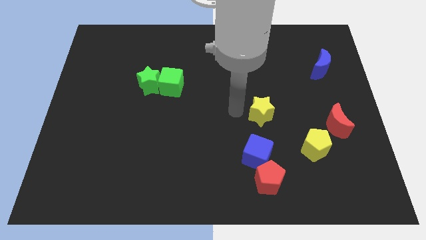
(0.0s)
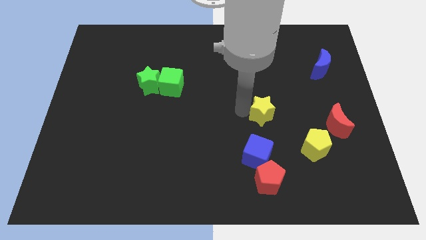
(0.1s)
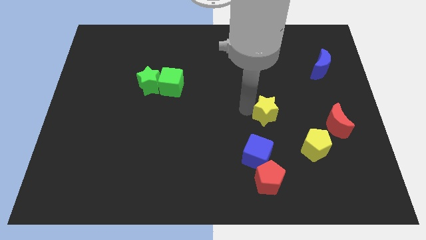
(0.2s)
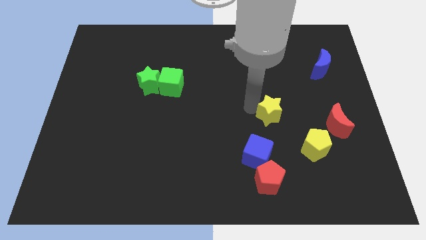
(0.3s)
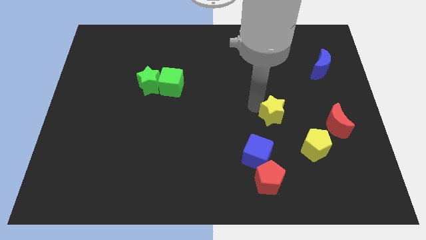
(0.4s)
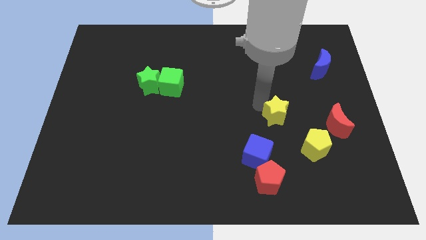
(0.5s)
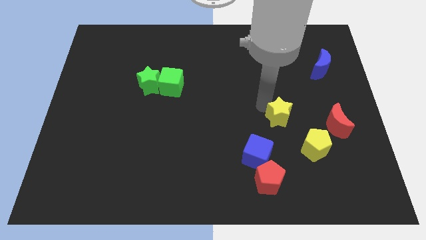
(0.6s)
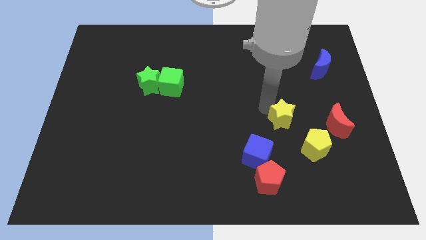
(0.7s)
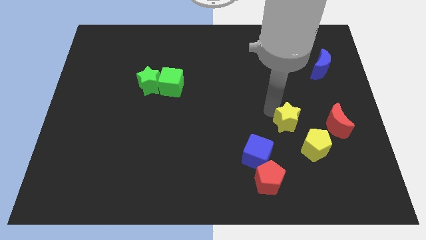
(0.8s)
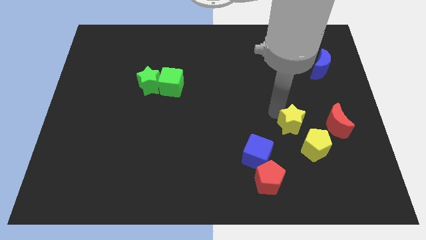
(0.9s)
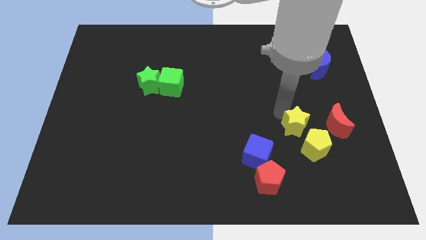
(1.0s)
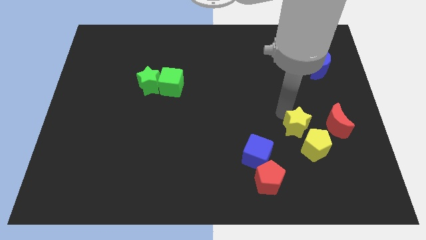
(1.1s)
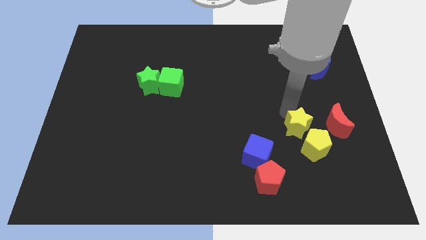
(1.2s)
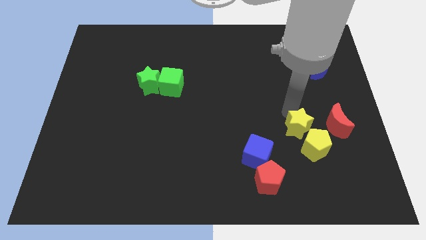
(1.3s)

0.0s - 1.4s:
move the yellow star towards the yellow pentagon

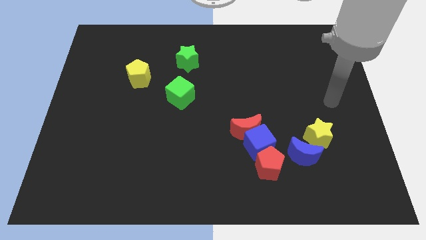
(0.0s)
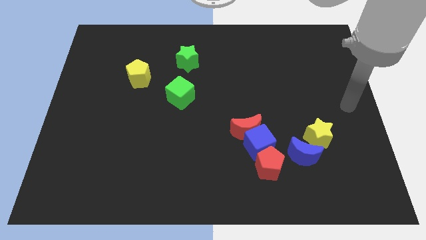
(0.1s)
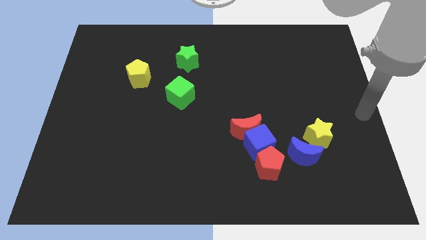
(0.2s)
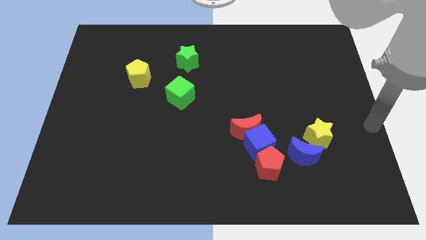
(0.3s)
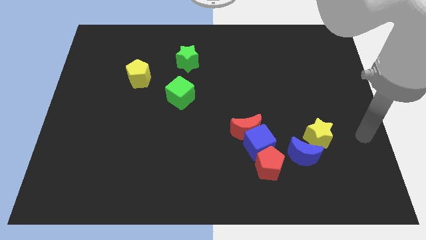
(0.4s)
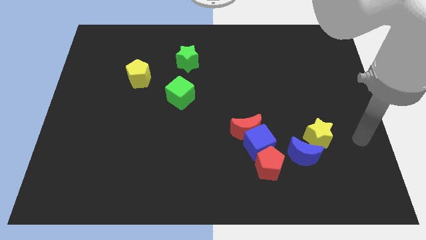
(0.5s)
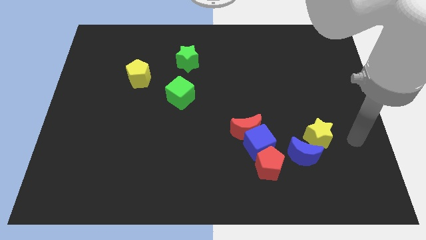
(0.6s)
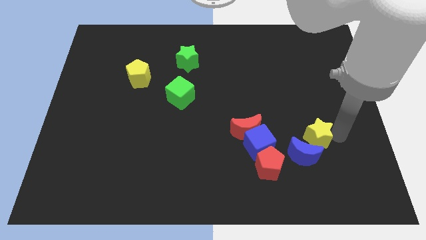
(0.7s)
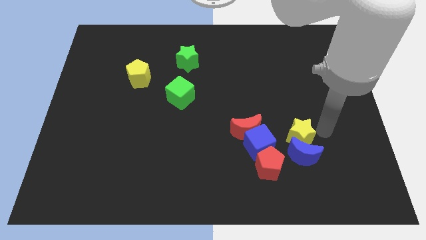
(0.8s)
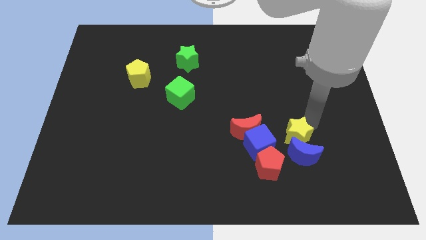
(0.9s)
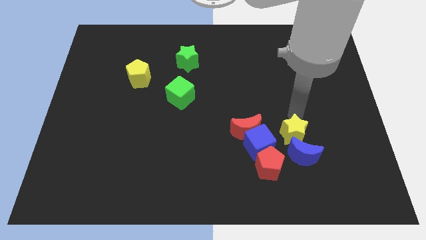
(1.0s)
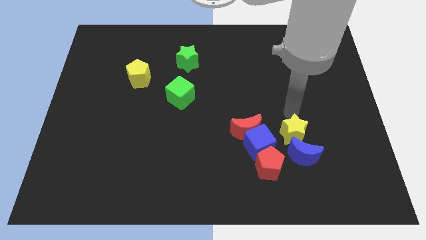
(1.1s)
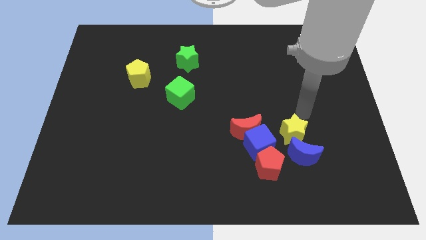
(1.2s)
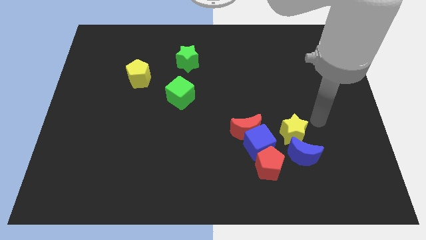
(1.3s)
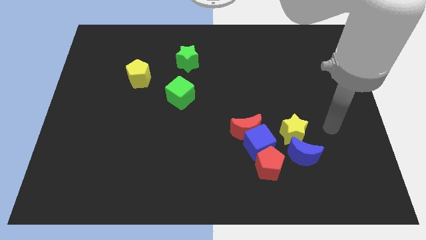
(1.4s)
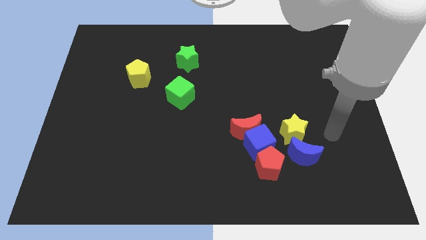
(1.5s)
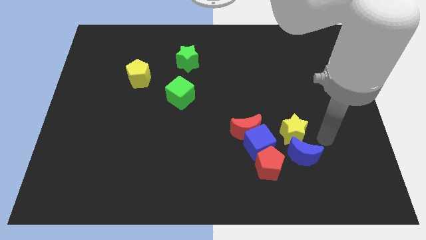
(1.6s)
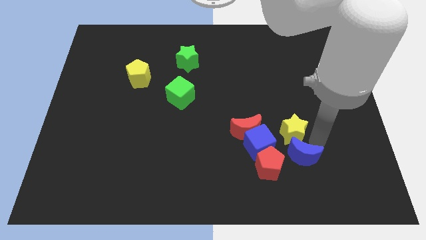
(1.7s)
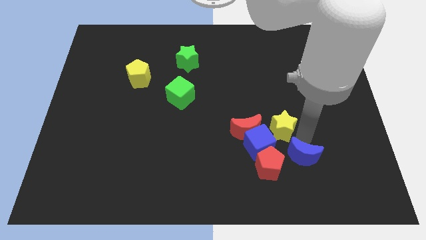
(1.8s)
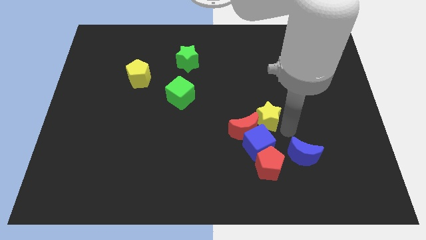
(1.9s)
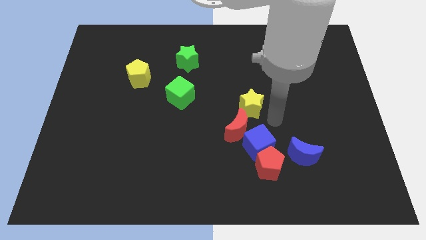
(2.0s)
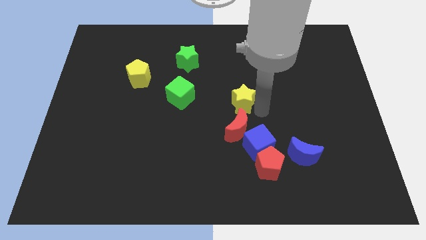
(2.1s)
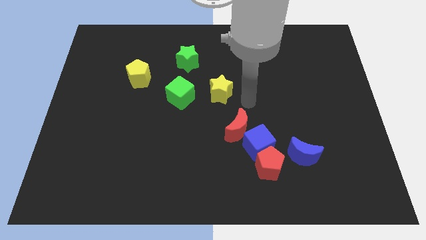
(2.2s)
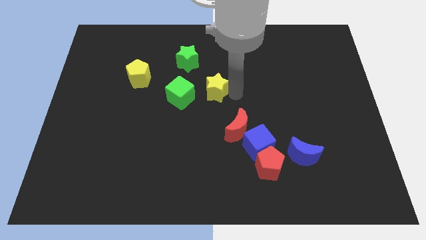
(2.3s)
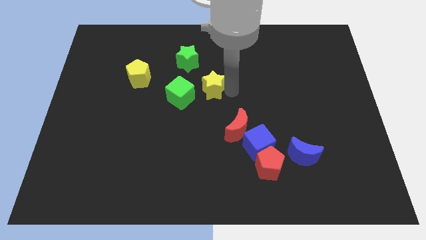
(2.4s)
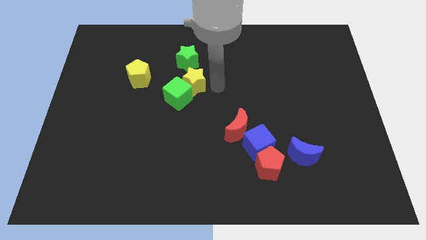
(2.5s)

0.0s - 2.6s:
move the yellow star close to green cube

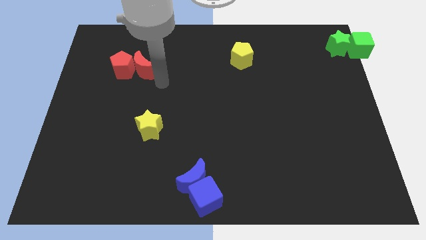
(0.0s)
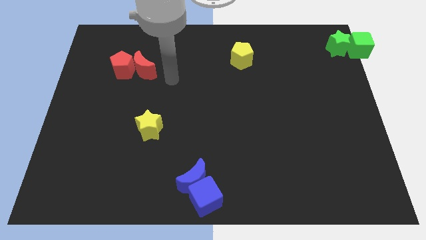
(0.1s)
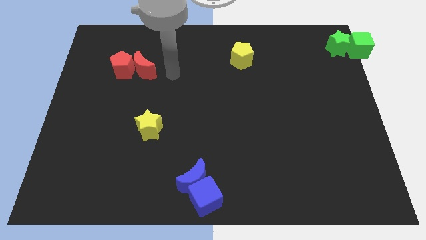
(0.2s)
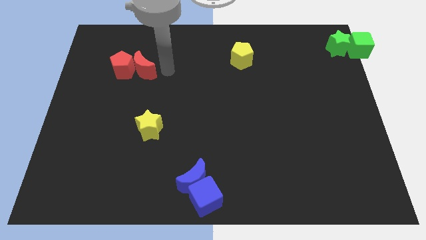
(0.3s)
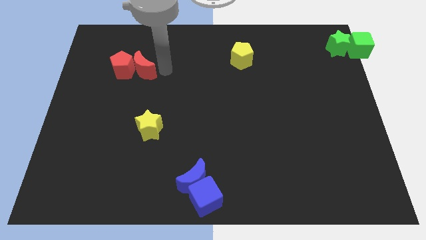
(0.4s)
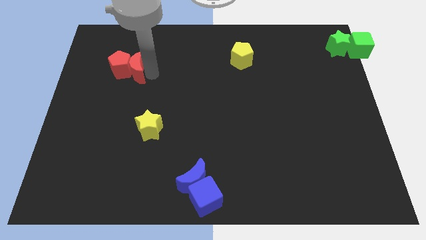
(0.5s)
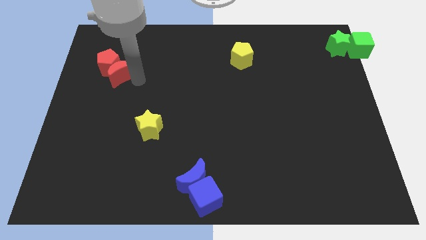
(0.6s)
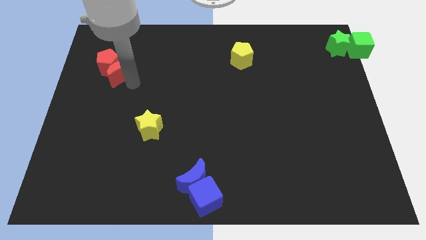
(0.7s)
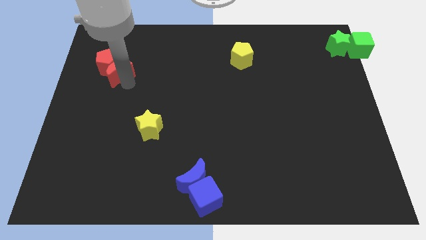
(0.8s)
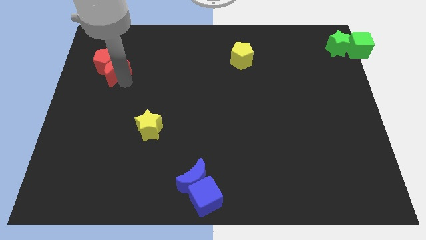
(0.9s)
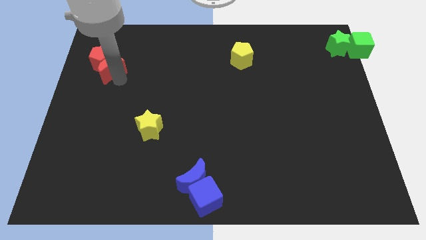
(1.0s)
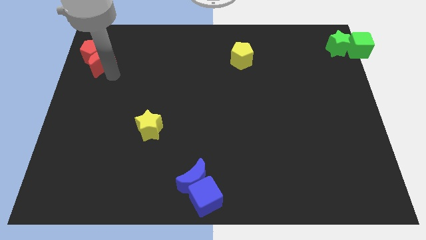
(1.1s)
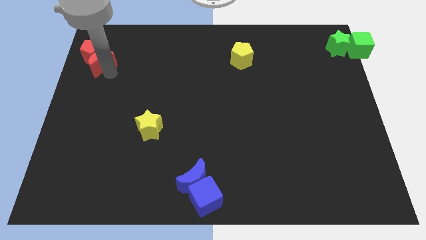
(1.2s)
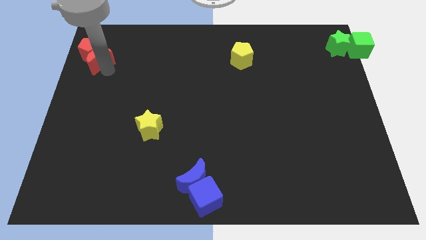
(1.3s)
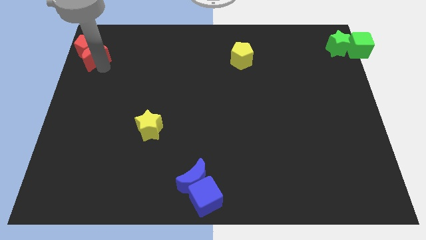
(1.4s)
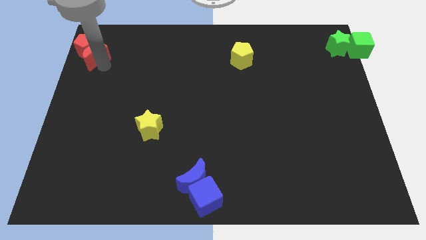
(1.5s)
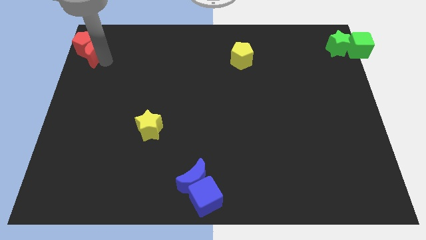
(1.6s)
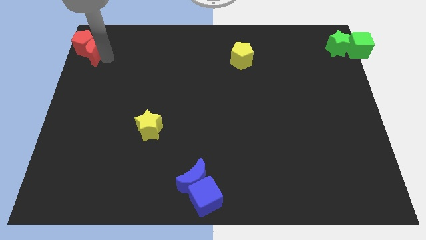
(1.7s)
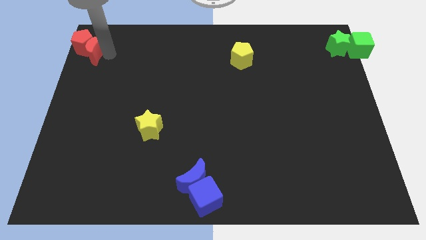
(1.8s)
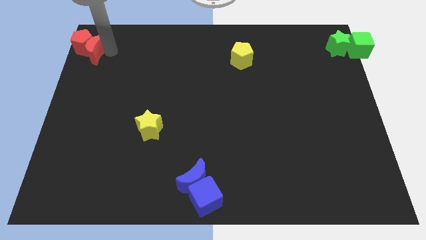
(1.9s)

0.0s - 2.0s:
push the red pentagon with red crescent to the top left corner of the board

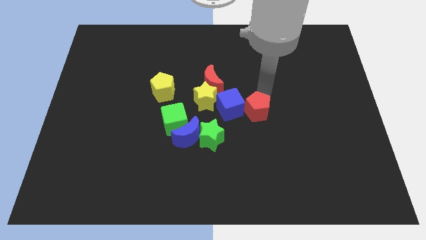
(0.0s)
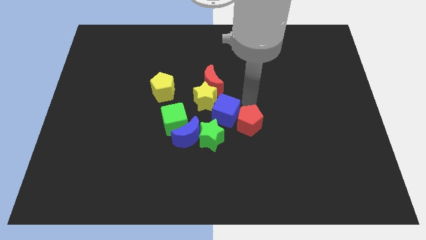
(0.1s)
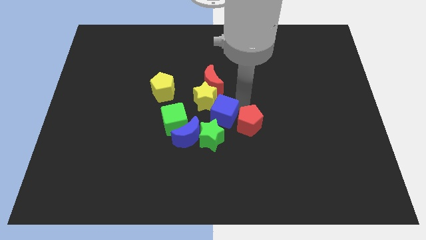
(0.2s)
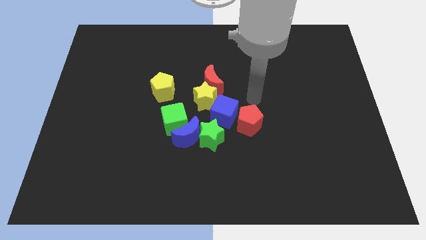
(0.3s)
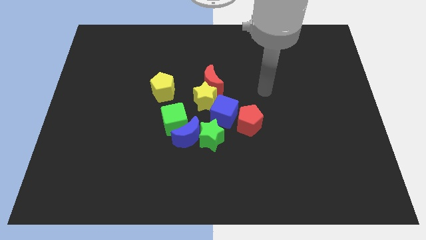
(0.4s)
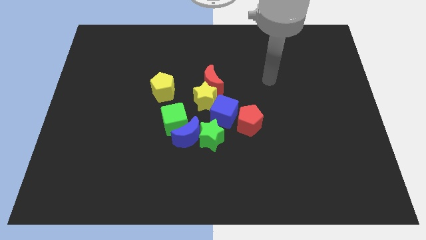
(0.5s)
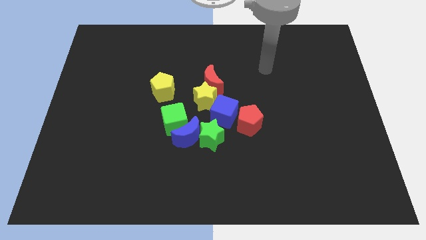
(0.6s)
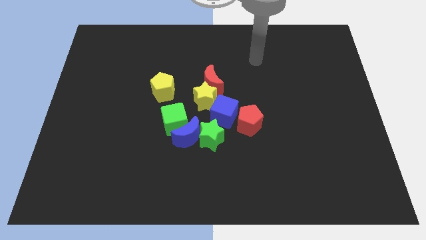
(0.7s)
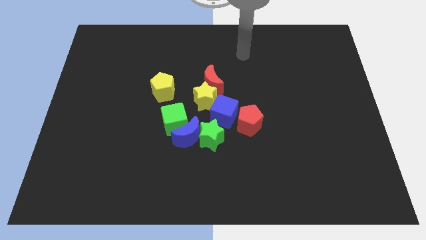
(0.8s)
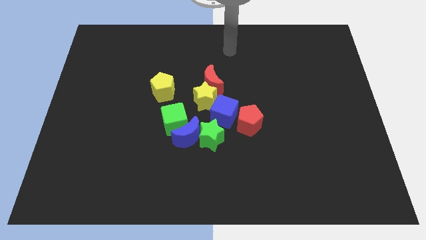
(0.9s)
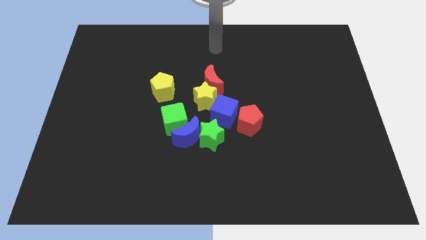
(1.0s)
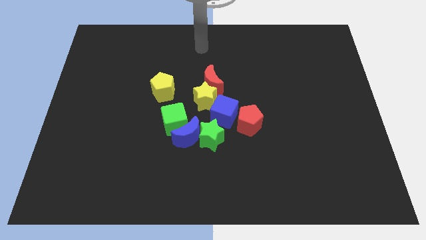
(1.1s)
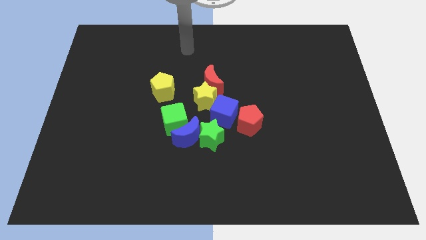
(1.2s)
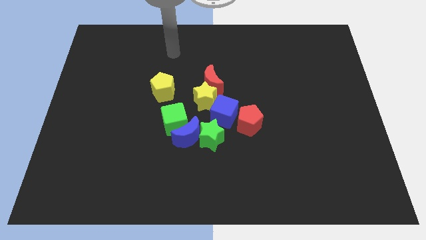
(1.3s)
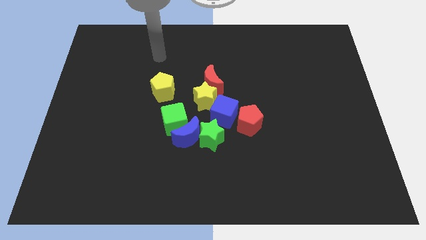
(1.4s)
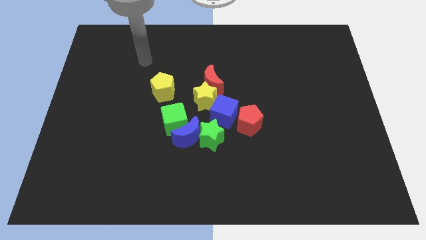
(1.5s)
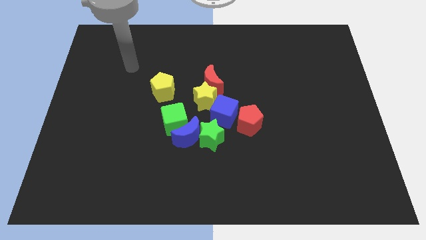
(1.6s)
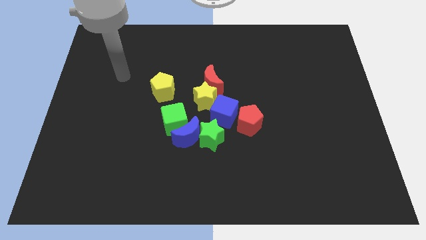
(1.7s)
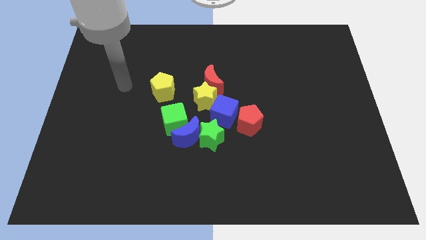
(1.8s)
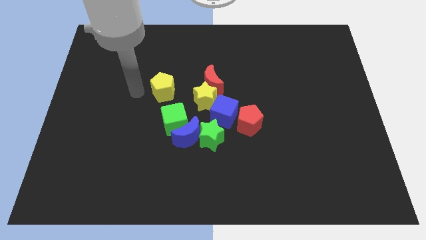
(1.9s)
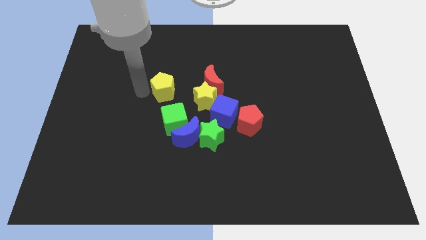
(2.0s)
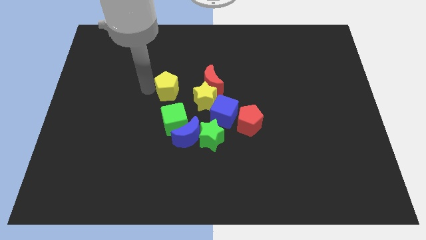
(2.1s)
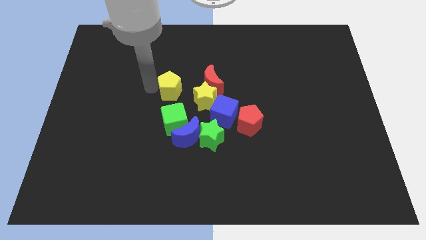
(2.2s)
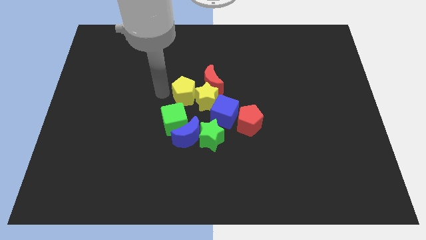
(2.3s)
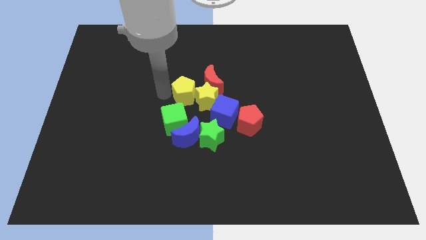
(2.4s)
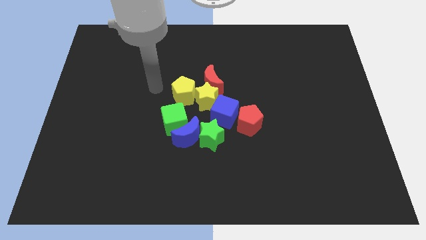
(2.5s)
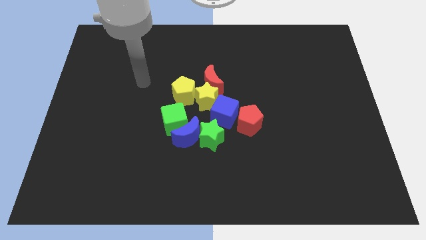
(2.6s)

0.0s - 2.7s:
move the yellow pentagon into the yellow star

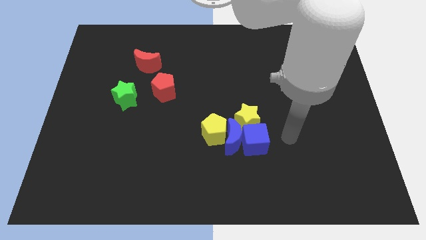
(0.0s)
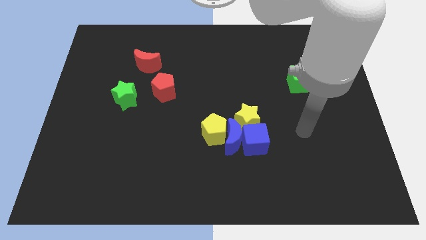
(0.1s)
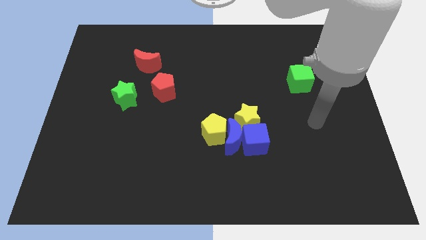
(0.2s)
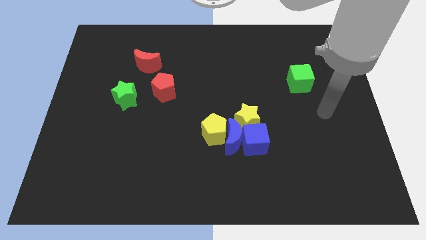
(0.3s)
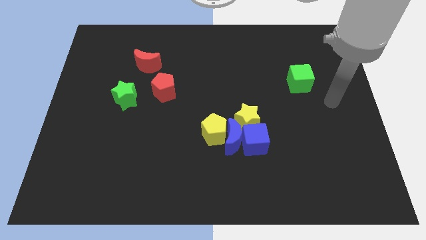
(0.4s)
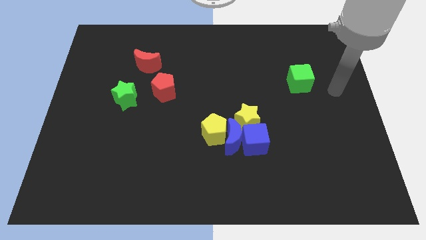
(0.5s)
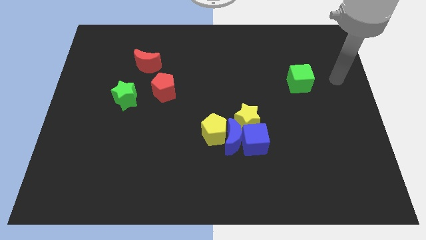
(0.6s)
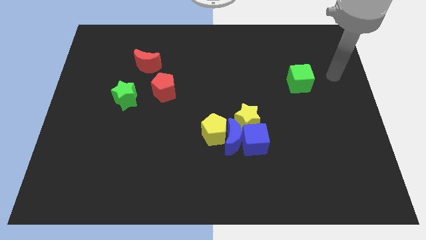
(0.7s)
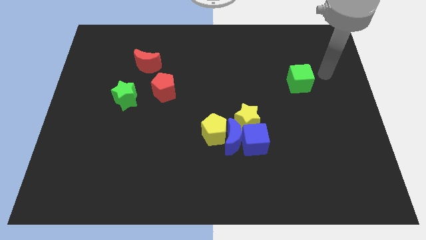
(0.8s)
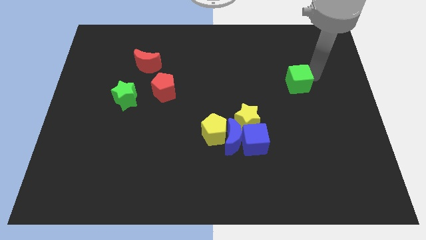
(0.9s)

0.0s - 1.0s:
touch at the right side of the green cube
